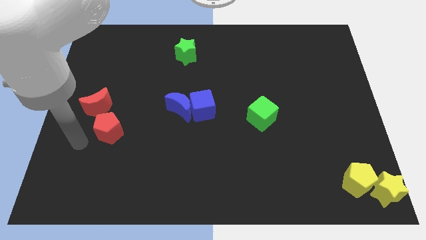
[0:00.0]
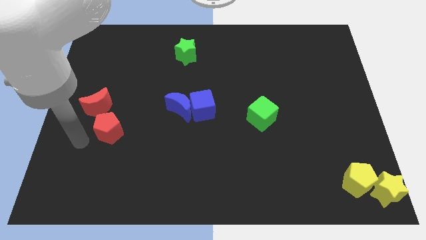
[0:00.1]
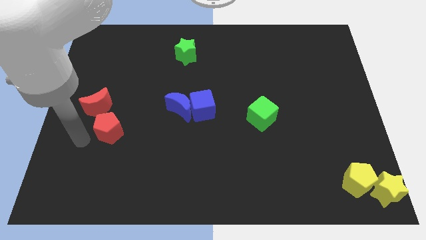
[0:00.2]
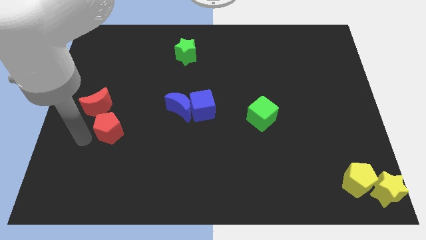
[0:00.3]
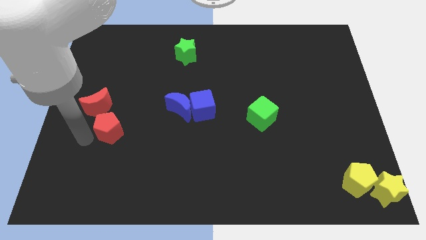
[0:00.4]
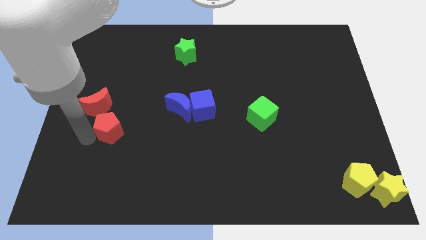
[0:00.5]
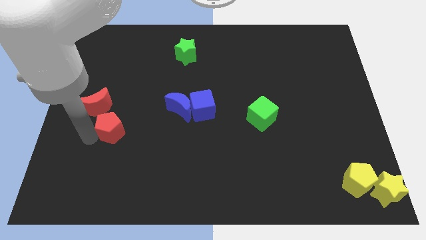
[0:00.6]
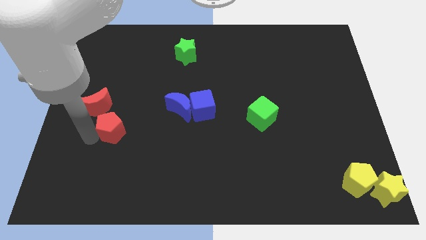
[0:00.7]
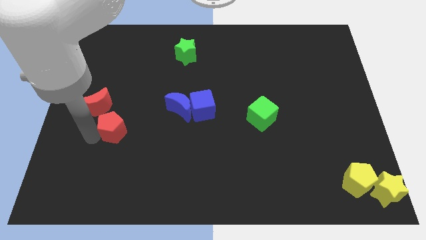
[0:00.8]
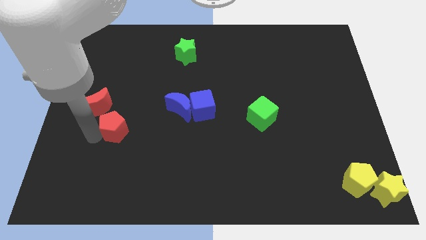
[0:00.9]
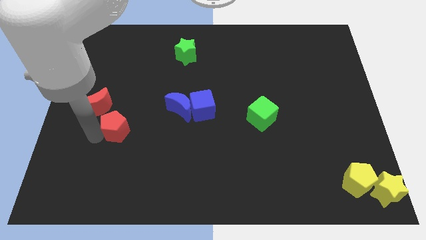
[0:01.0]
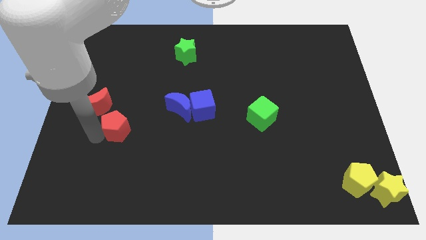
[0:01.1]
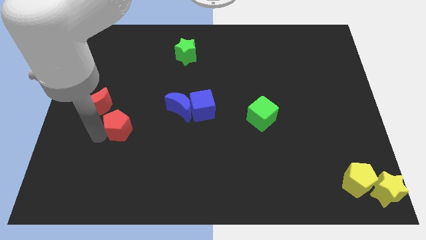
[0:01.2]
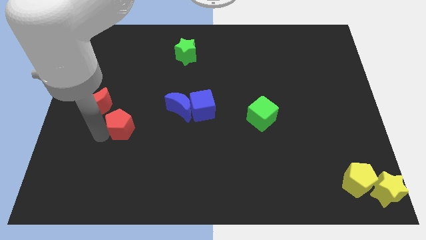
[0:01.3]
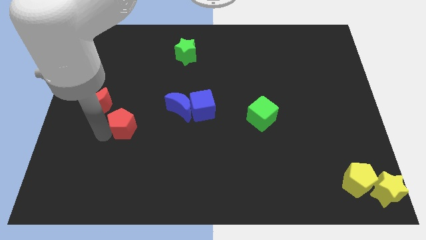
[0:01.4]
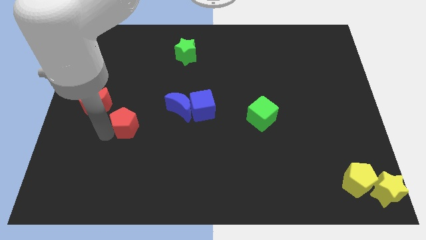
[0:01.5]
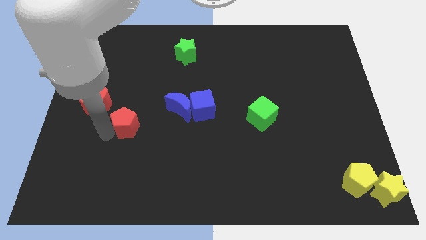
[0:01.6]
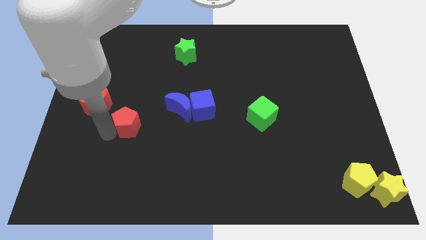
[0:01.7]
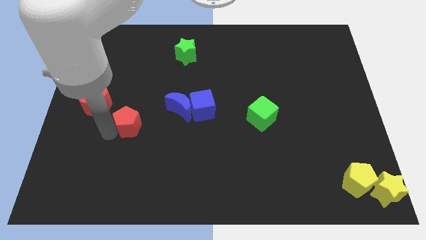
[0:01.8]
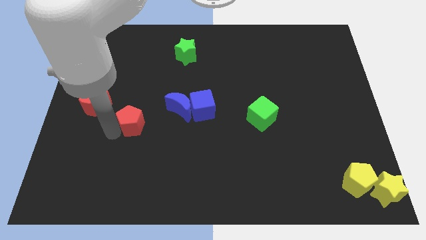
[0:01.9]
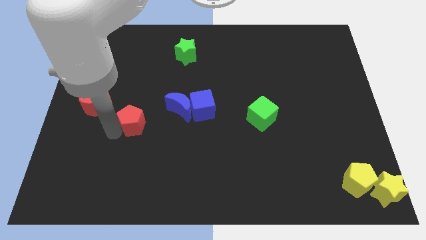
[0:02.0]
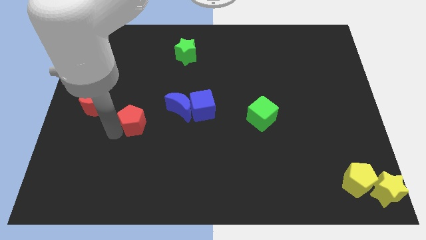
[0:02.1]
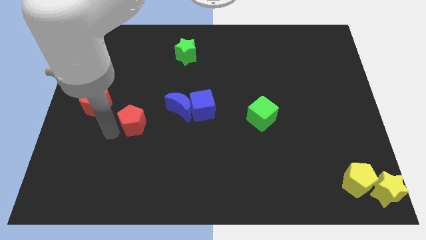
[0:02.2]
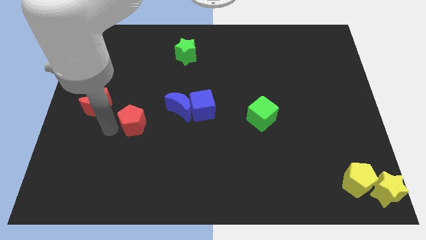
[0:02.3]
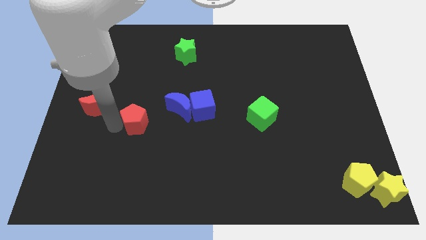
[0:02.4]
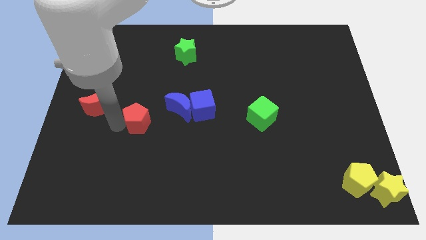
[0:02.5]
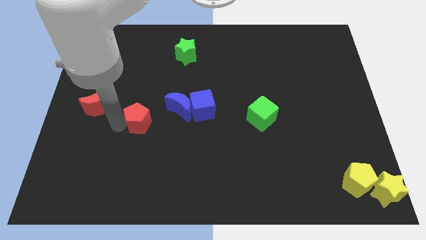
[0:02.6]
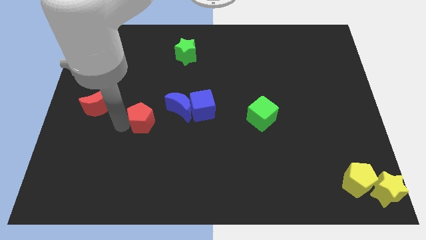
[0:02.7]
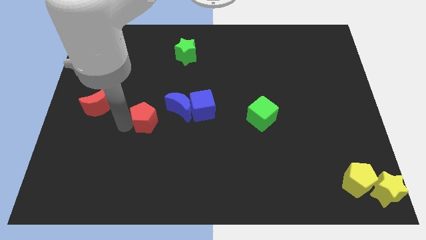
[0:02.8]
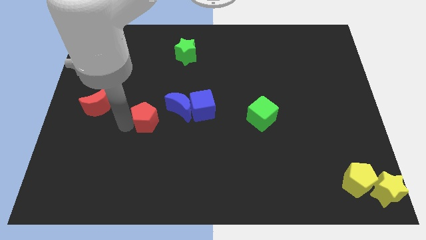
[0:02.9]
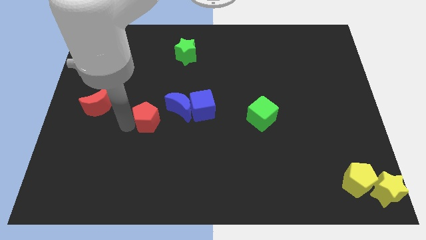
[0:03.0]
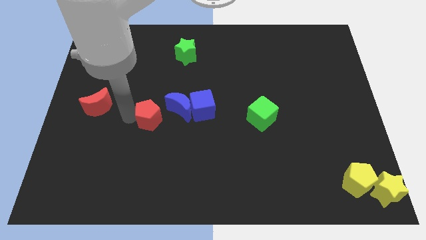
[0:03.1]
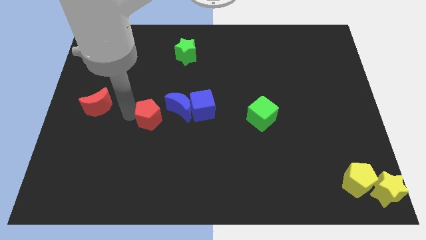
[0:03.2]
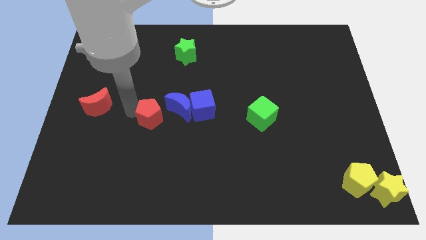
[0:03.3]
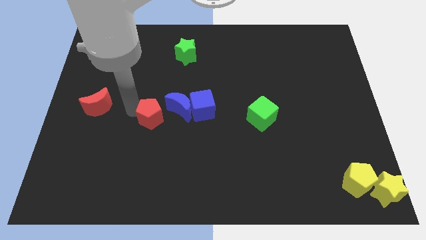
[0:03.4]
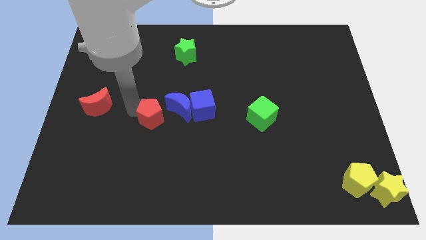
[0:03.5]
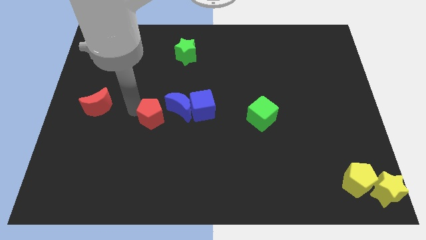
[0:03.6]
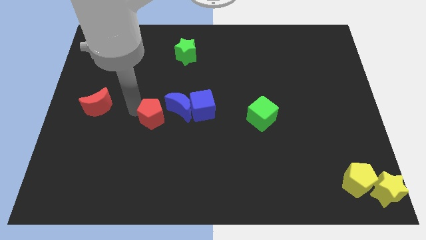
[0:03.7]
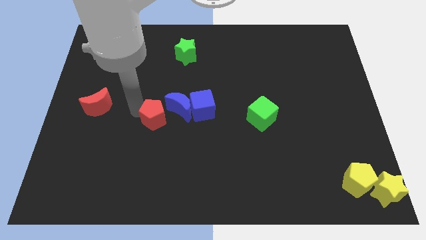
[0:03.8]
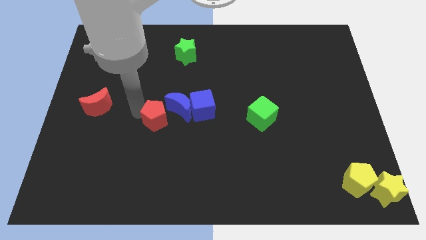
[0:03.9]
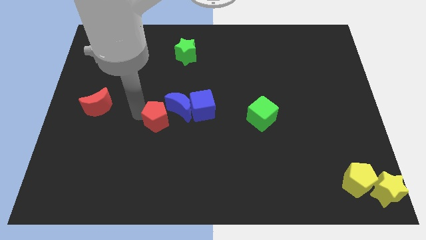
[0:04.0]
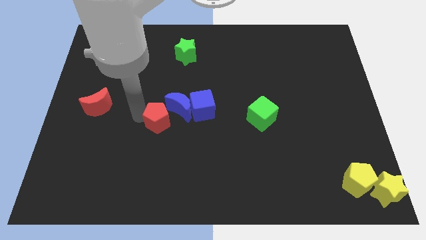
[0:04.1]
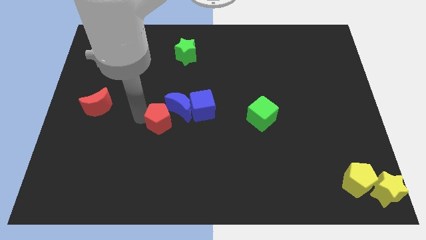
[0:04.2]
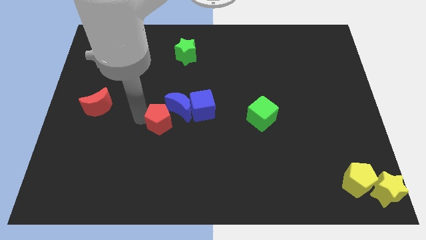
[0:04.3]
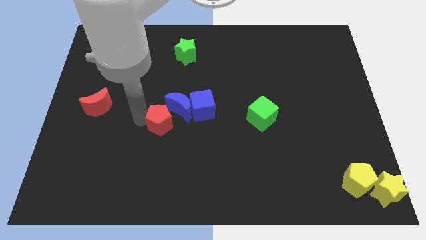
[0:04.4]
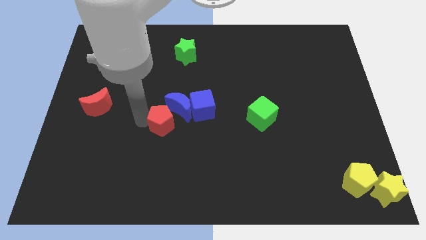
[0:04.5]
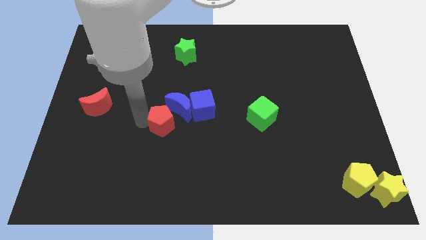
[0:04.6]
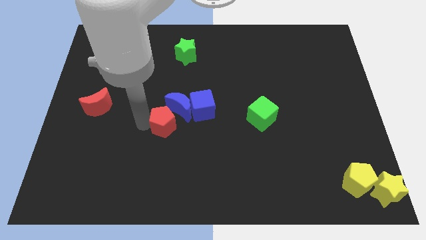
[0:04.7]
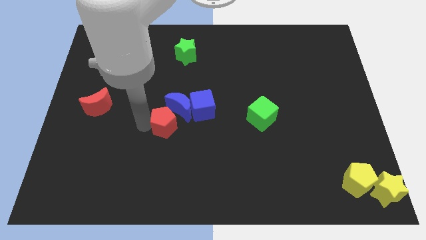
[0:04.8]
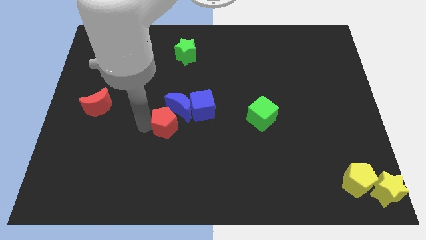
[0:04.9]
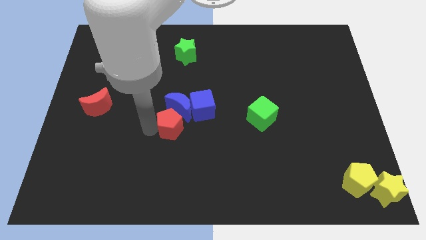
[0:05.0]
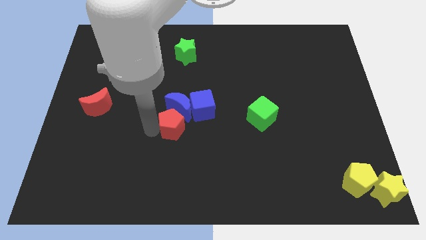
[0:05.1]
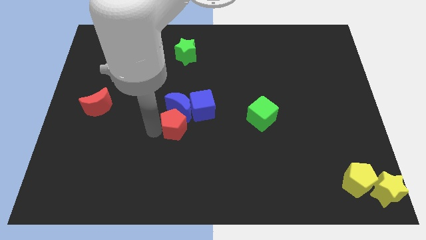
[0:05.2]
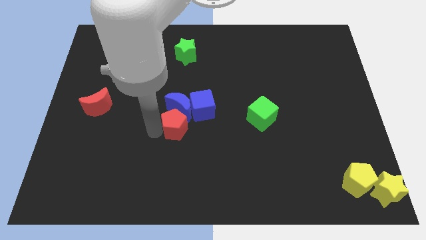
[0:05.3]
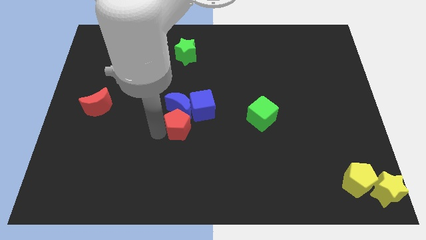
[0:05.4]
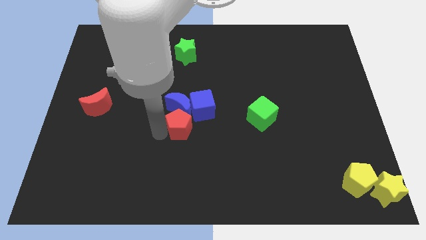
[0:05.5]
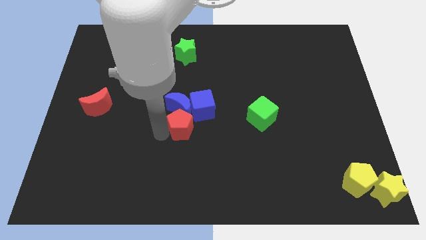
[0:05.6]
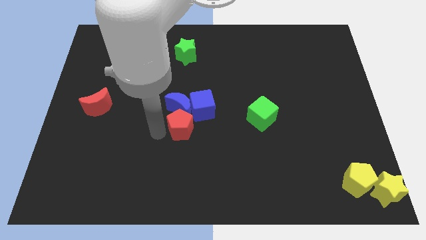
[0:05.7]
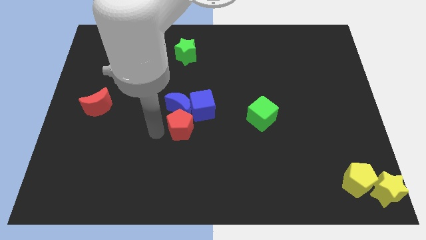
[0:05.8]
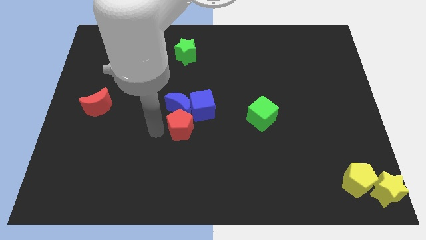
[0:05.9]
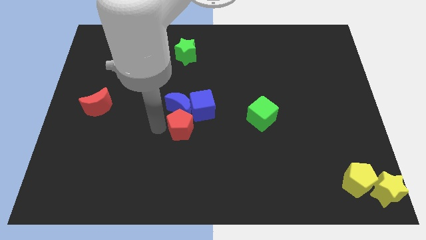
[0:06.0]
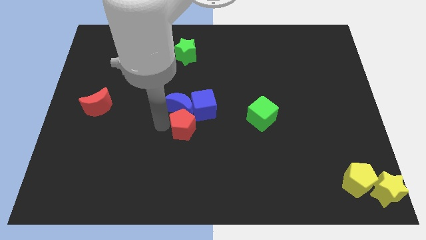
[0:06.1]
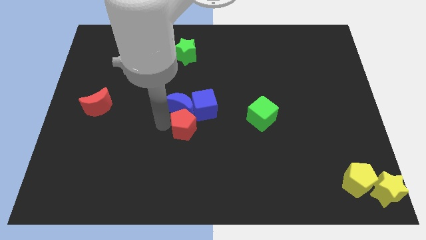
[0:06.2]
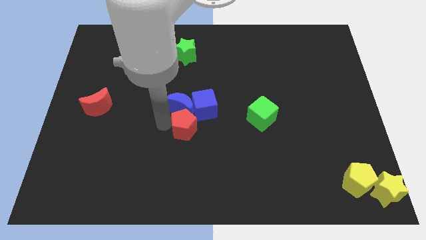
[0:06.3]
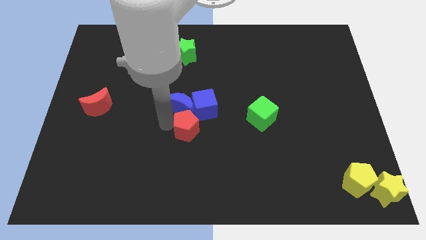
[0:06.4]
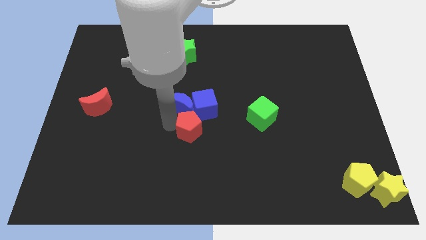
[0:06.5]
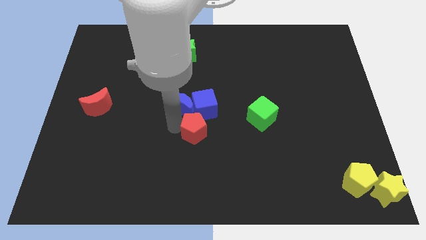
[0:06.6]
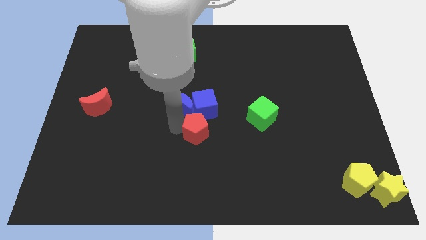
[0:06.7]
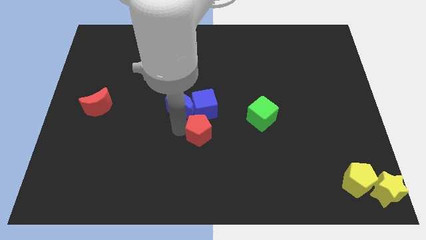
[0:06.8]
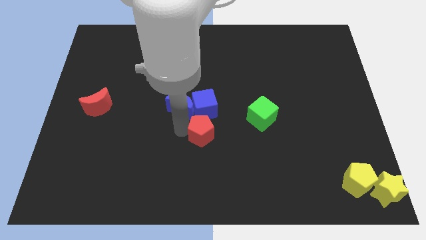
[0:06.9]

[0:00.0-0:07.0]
place the red pentagon below the blue blocks

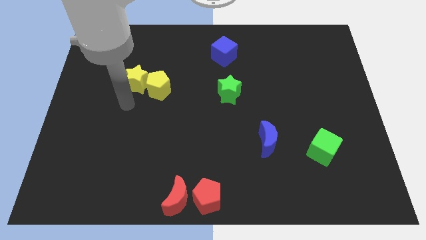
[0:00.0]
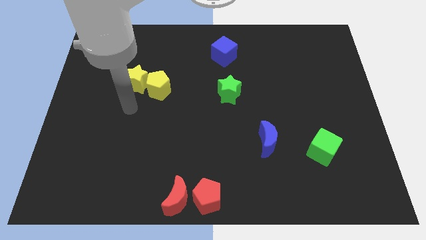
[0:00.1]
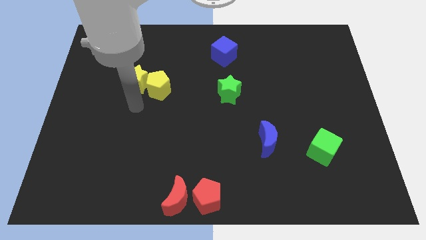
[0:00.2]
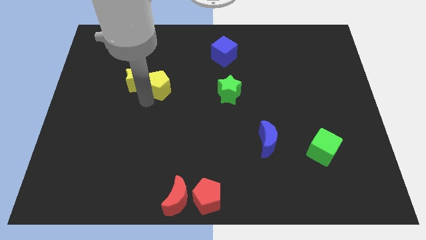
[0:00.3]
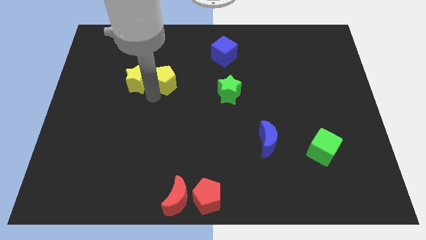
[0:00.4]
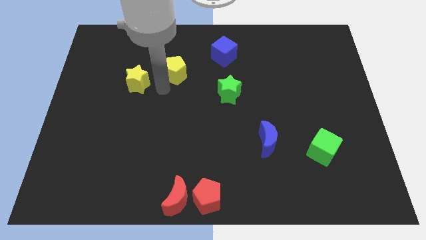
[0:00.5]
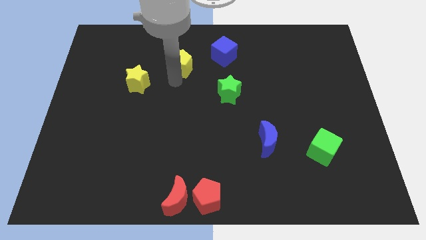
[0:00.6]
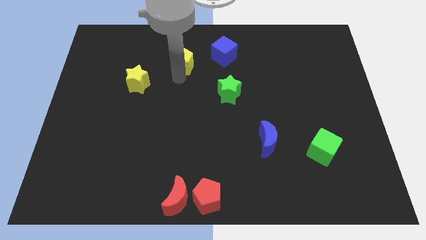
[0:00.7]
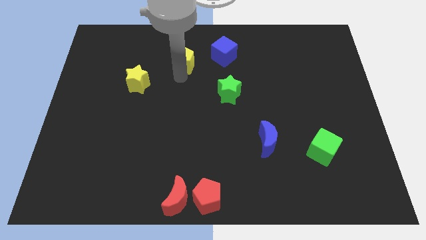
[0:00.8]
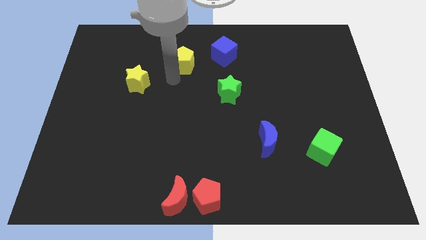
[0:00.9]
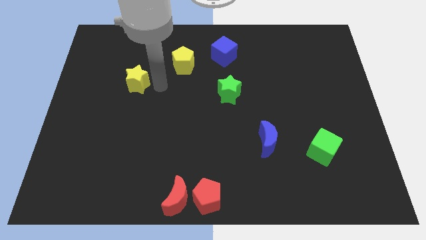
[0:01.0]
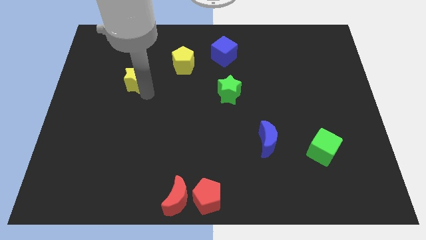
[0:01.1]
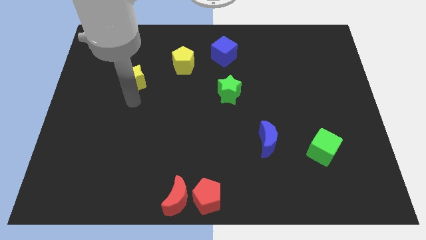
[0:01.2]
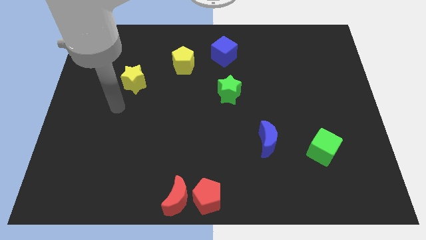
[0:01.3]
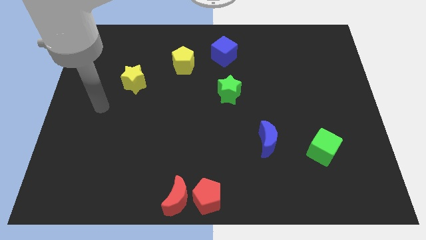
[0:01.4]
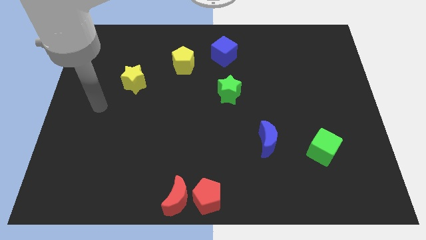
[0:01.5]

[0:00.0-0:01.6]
place the yellow pentagon in between the yellow star and blue cube

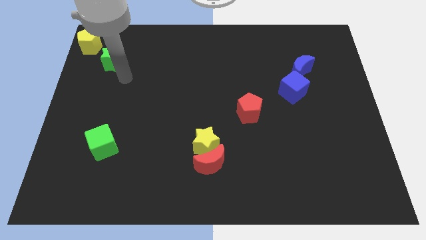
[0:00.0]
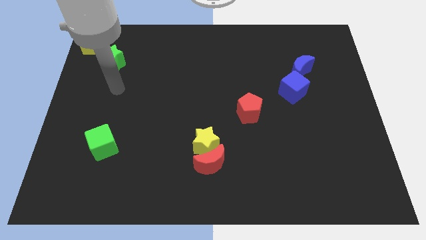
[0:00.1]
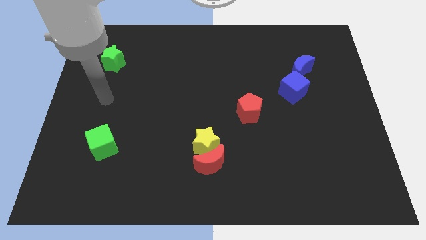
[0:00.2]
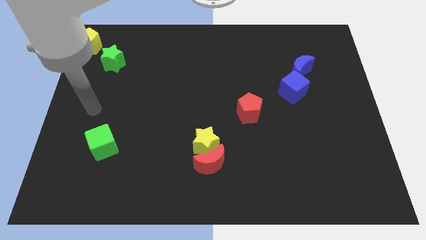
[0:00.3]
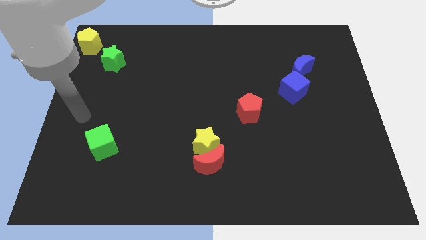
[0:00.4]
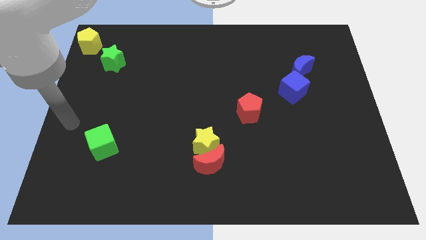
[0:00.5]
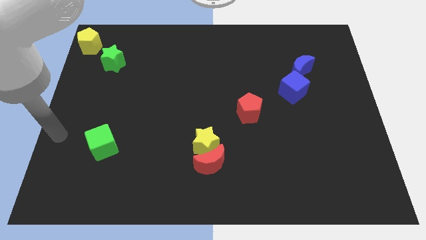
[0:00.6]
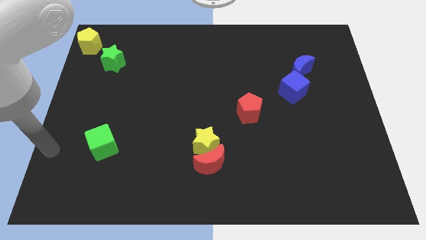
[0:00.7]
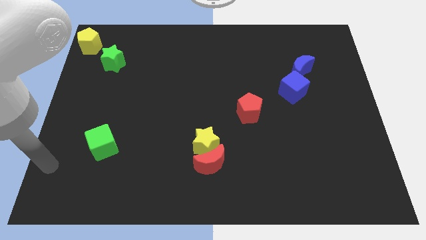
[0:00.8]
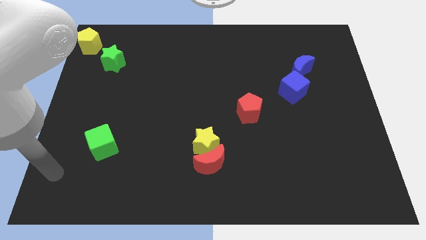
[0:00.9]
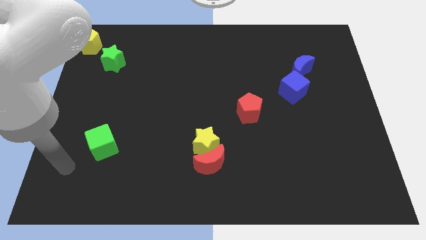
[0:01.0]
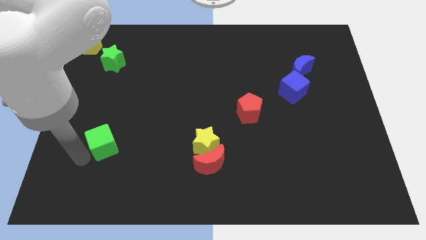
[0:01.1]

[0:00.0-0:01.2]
move your arm away from green star
